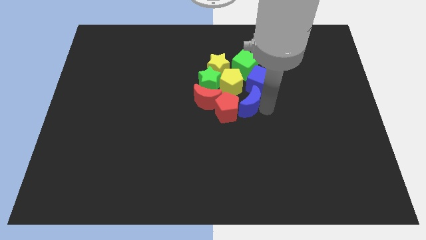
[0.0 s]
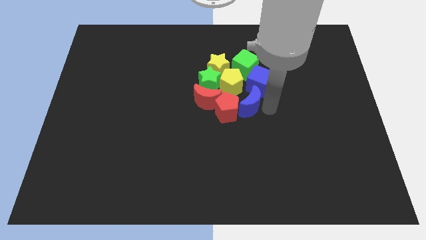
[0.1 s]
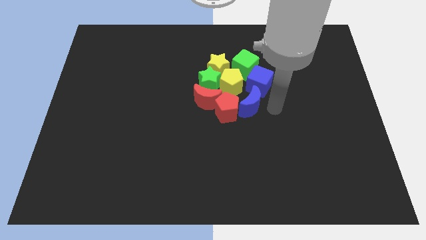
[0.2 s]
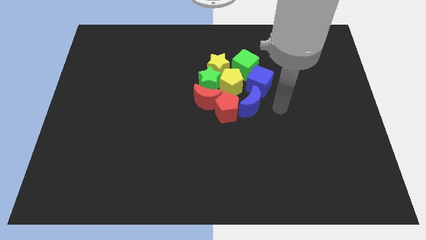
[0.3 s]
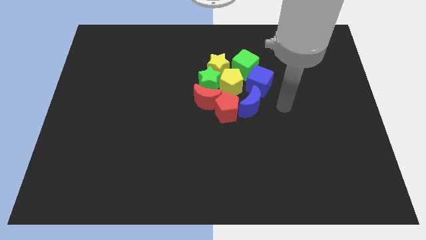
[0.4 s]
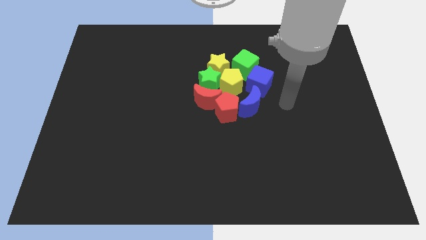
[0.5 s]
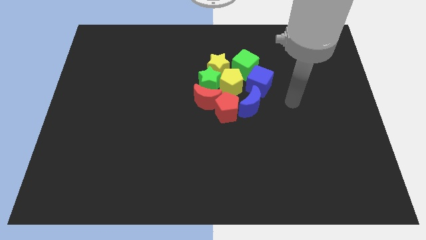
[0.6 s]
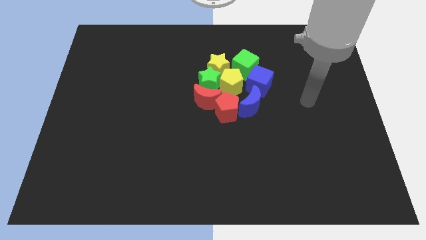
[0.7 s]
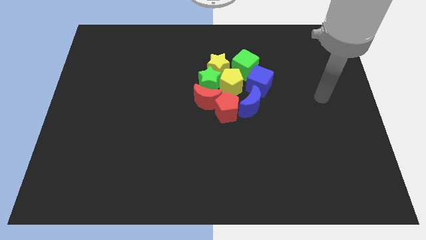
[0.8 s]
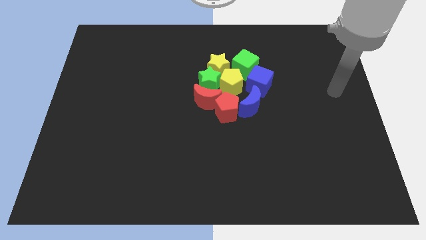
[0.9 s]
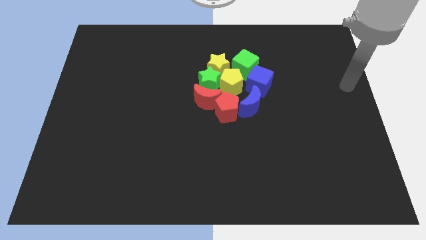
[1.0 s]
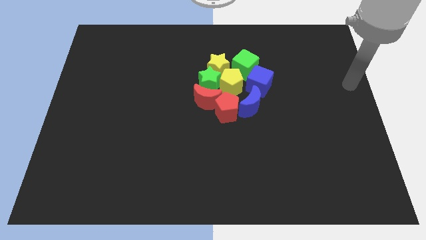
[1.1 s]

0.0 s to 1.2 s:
go and place your arm at the right side of the blue cube

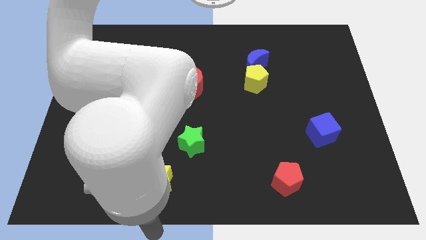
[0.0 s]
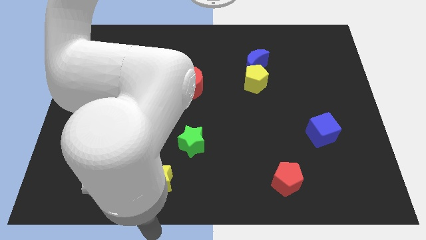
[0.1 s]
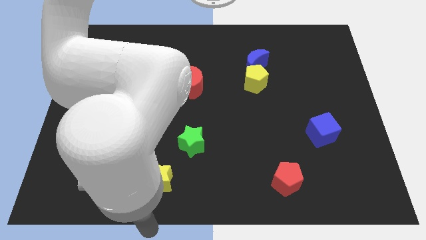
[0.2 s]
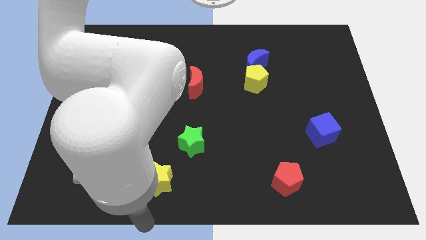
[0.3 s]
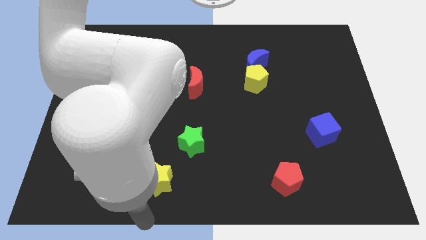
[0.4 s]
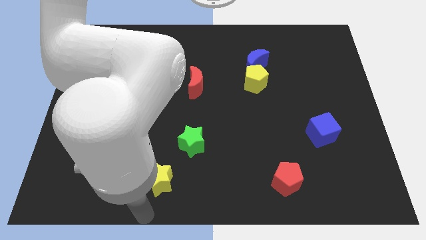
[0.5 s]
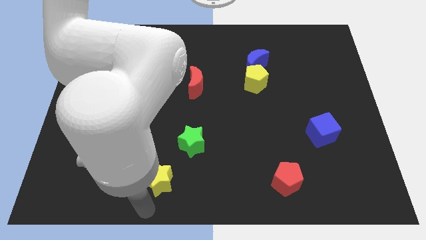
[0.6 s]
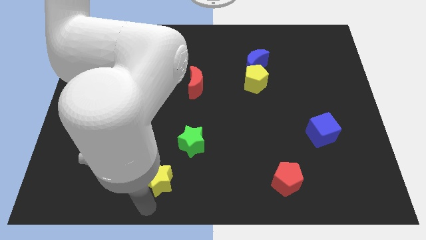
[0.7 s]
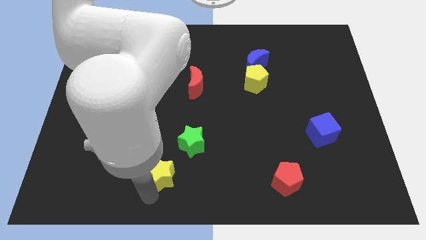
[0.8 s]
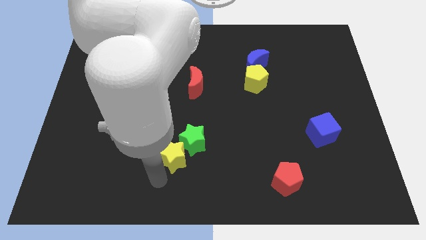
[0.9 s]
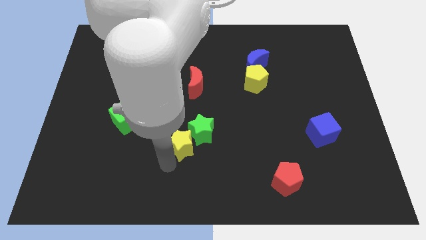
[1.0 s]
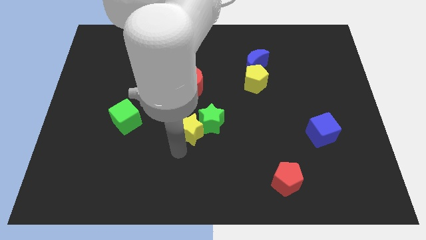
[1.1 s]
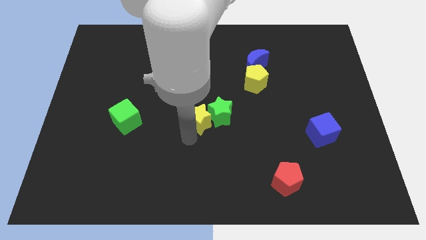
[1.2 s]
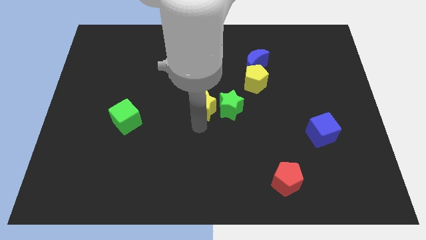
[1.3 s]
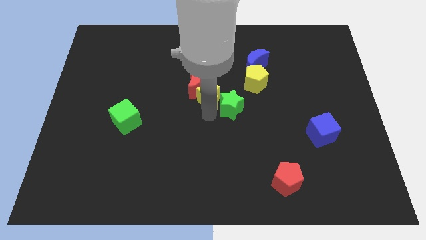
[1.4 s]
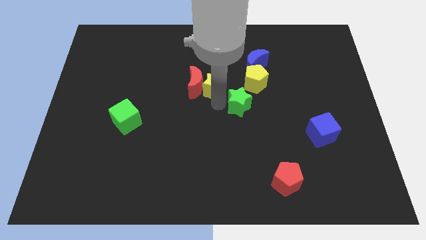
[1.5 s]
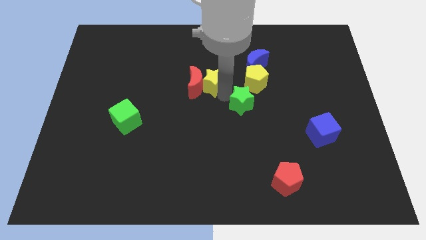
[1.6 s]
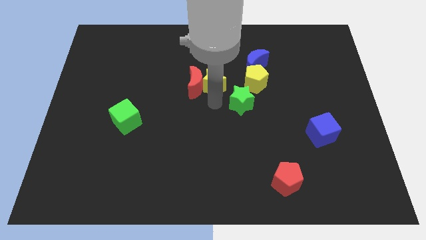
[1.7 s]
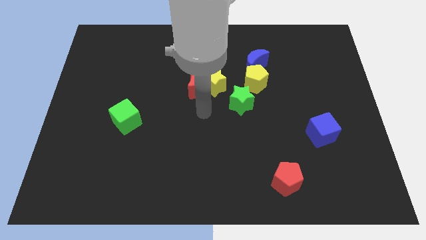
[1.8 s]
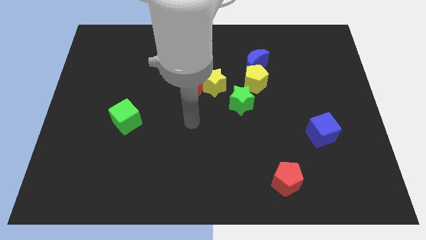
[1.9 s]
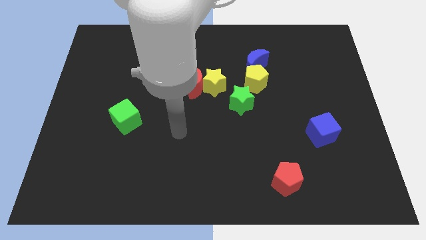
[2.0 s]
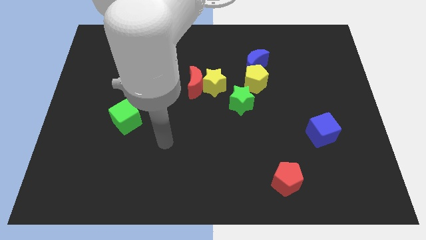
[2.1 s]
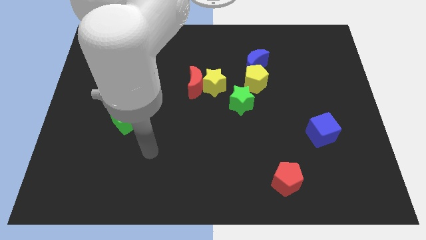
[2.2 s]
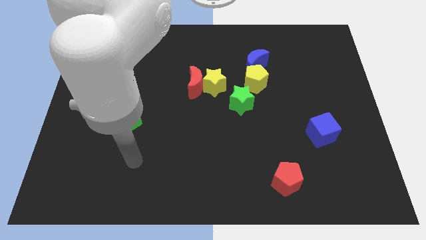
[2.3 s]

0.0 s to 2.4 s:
place the green star below the yellow pentagon

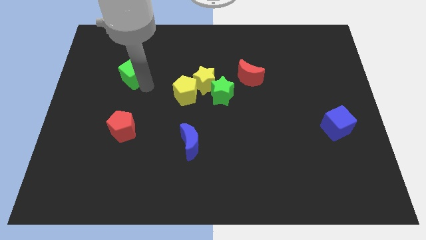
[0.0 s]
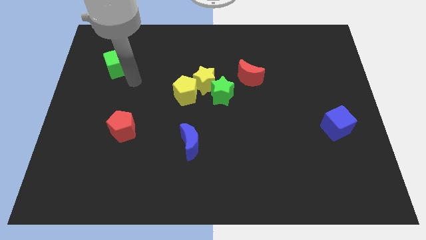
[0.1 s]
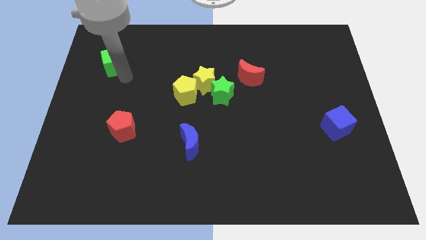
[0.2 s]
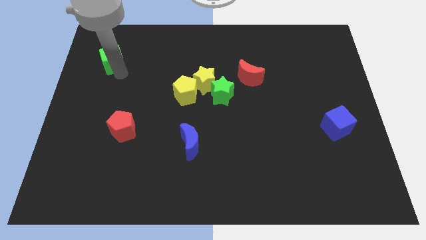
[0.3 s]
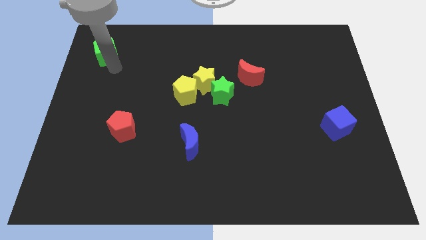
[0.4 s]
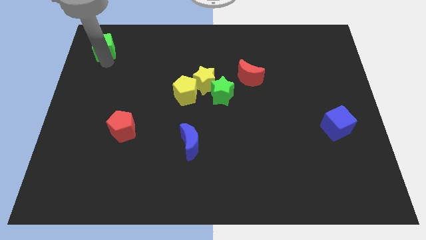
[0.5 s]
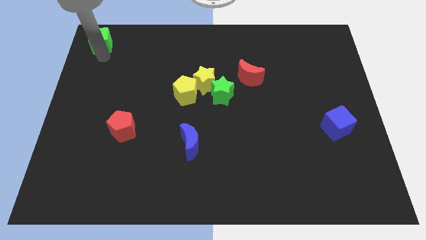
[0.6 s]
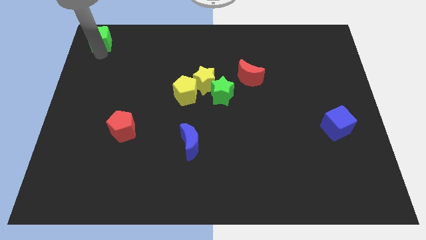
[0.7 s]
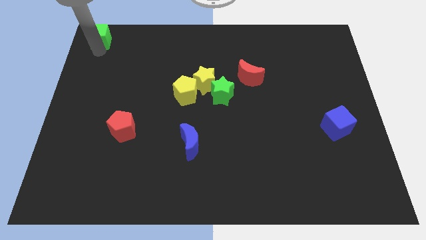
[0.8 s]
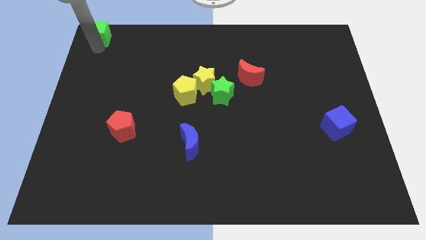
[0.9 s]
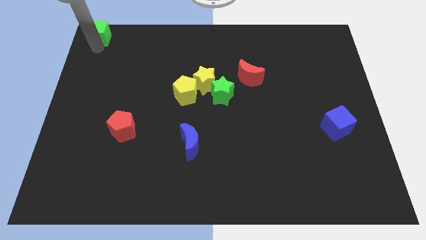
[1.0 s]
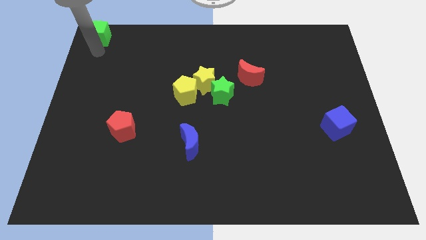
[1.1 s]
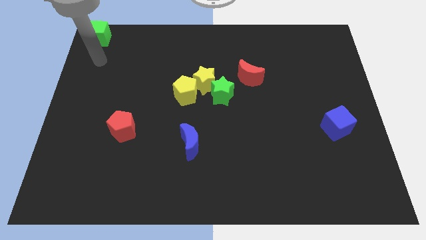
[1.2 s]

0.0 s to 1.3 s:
move the green cube to the top left of the board

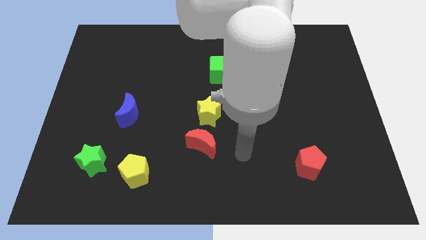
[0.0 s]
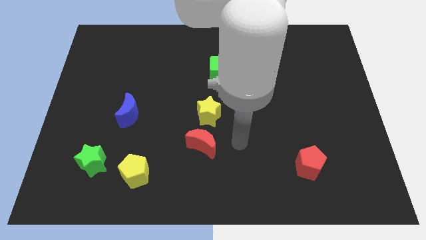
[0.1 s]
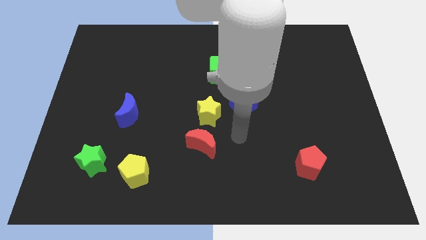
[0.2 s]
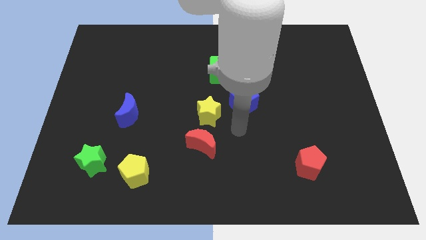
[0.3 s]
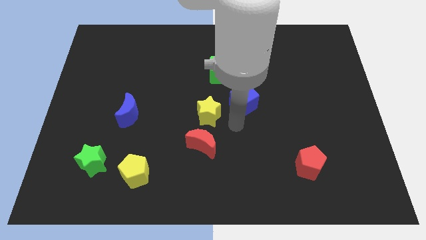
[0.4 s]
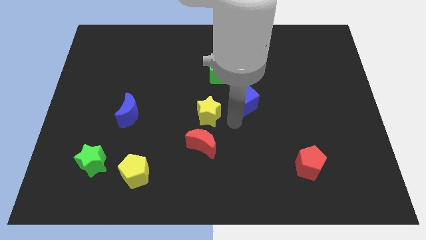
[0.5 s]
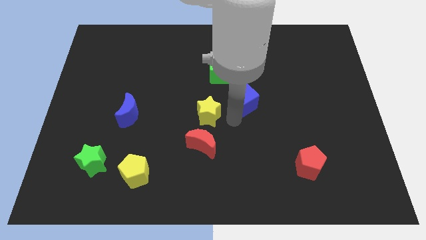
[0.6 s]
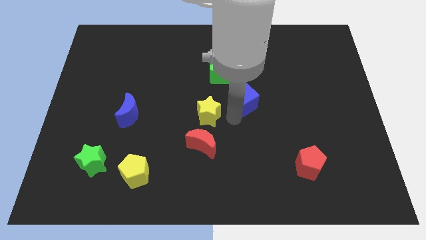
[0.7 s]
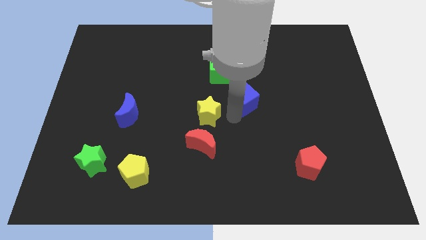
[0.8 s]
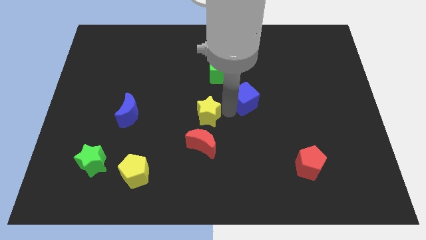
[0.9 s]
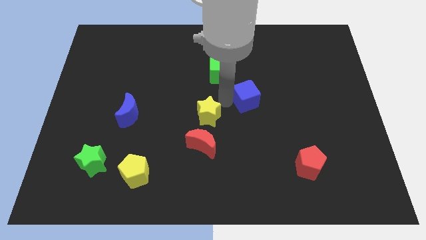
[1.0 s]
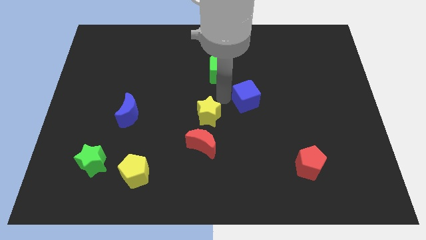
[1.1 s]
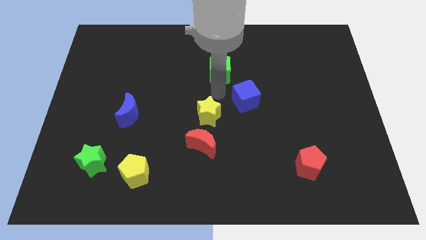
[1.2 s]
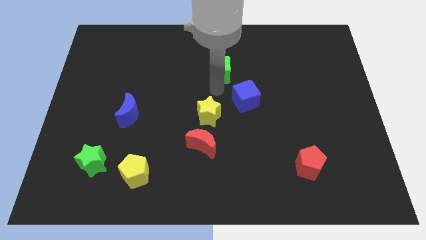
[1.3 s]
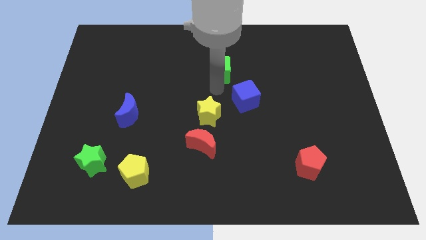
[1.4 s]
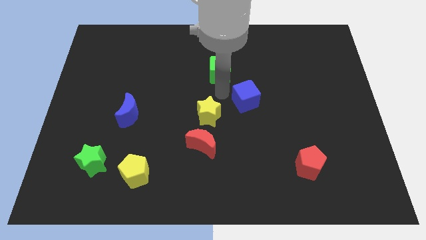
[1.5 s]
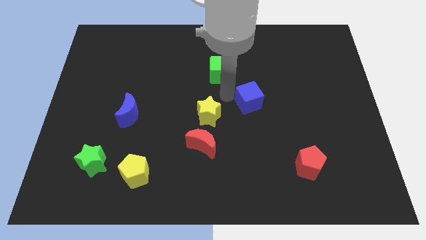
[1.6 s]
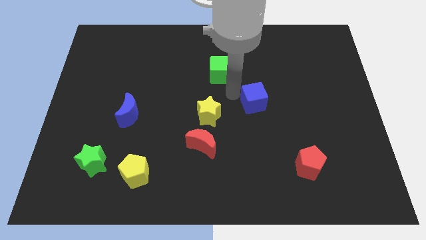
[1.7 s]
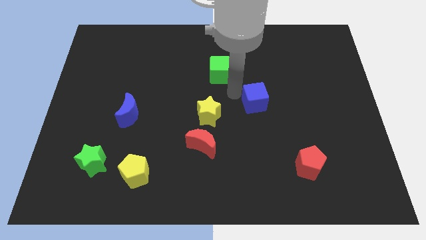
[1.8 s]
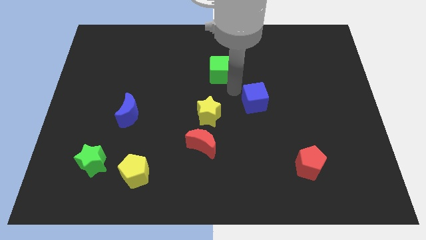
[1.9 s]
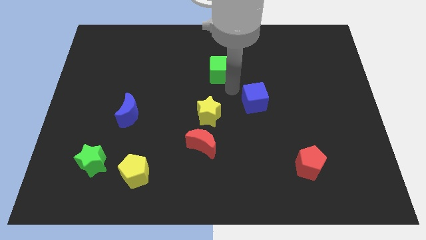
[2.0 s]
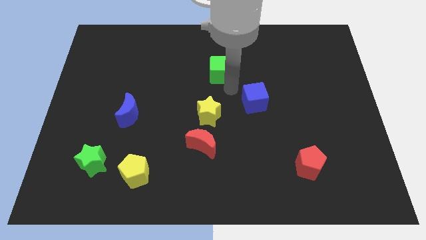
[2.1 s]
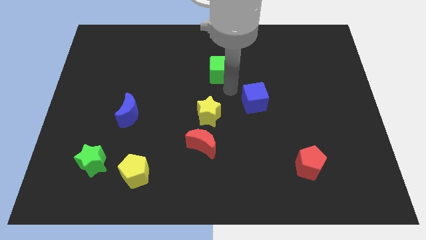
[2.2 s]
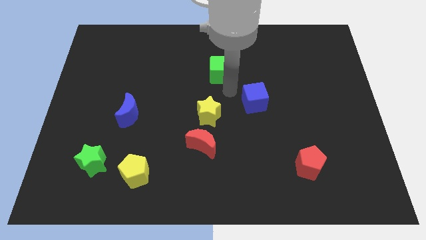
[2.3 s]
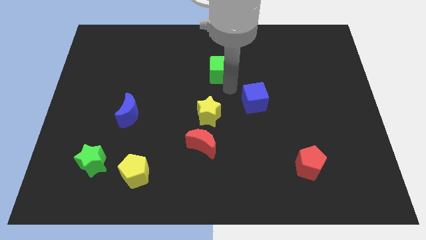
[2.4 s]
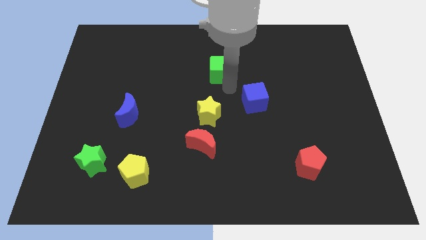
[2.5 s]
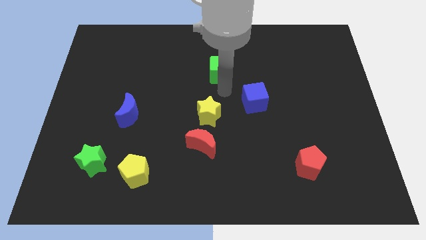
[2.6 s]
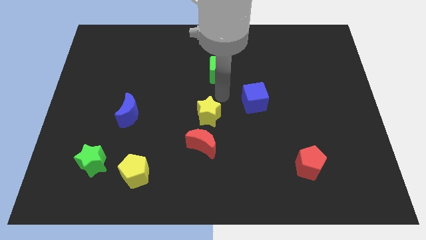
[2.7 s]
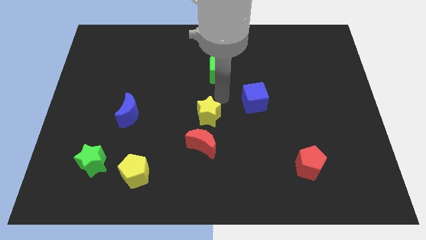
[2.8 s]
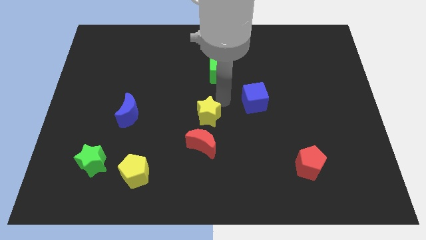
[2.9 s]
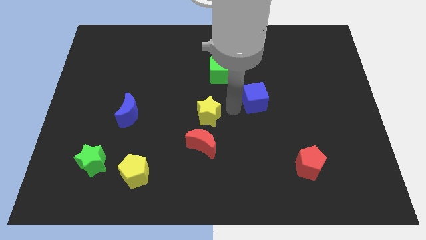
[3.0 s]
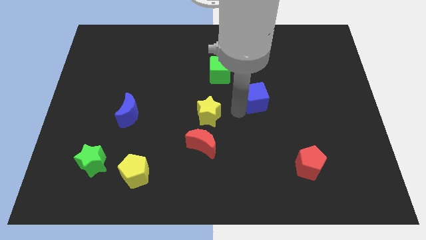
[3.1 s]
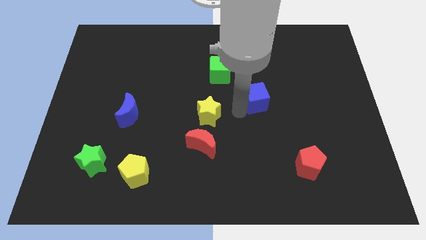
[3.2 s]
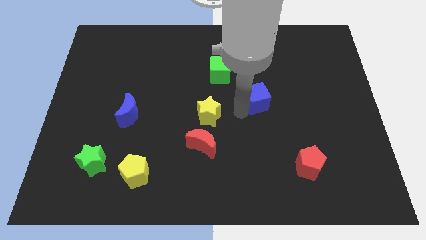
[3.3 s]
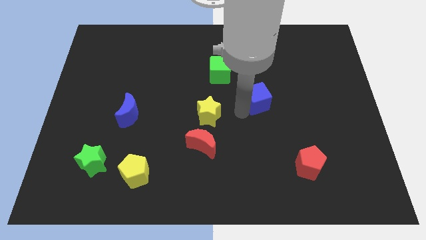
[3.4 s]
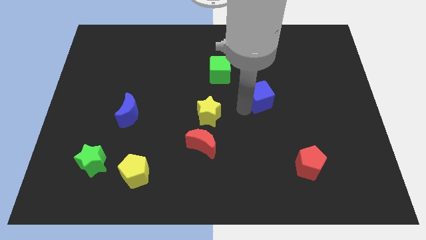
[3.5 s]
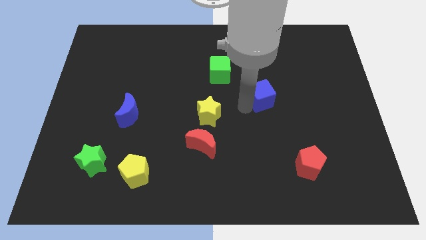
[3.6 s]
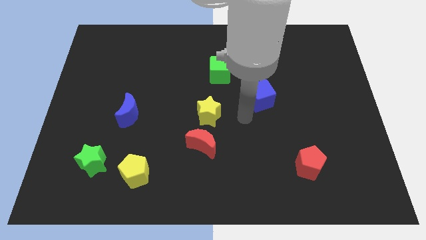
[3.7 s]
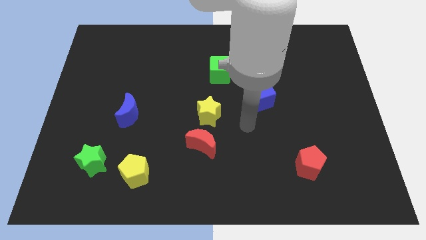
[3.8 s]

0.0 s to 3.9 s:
move the blue cube slightly towards the center right

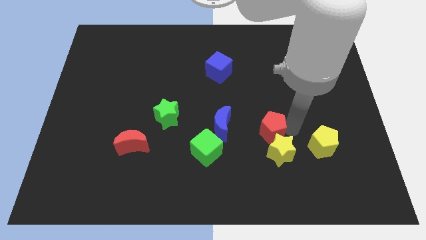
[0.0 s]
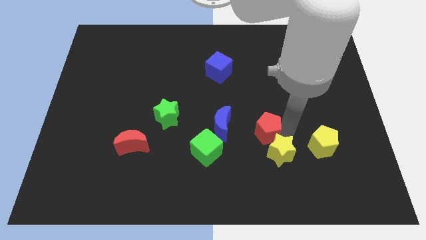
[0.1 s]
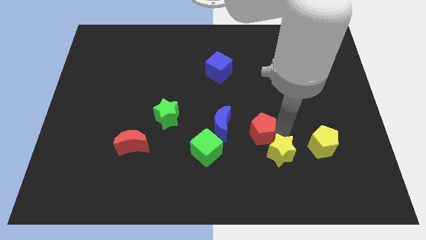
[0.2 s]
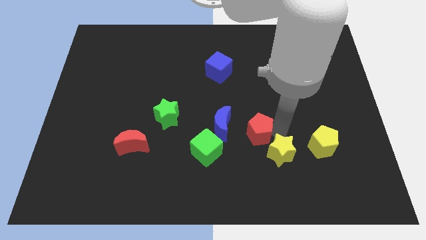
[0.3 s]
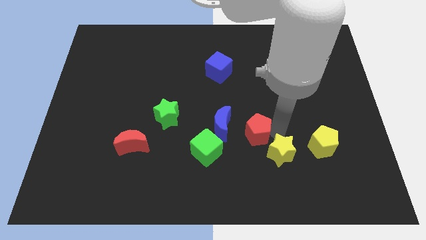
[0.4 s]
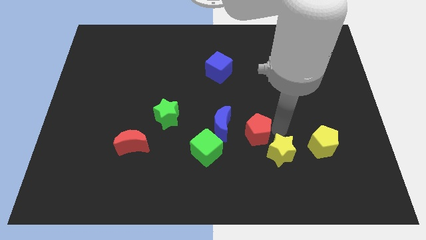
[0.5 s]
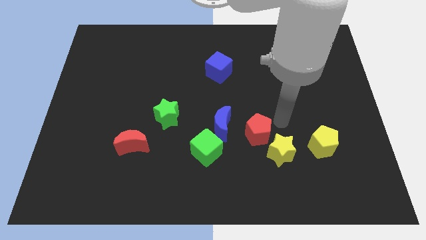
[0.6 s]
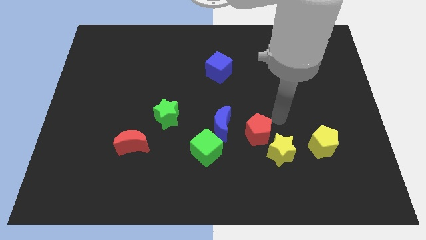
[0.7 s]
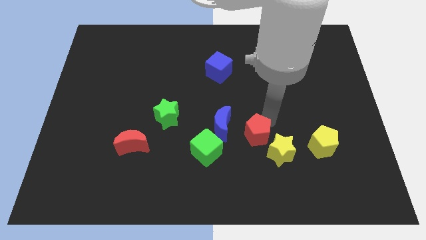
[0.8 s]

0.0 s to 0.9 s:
place the red pentagon to the right of blue moon
